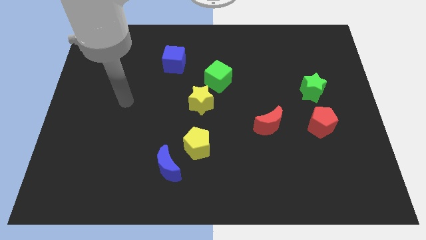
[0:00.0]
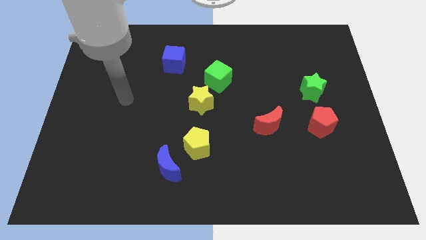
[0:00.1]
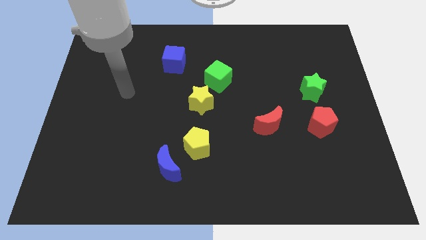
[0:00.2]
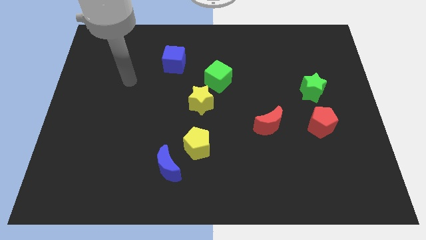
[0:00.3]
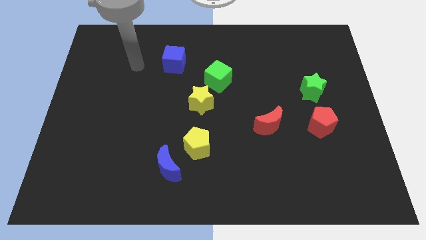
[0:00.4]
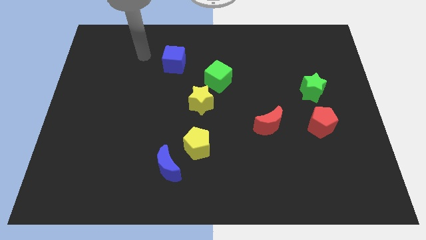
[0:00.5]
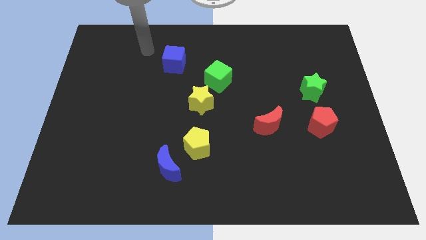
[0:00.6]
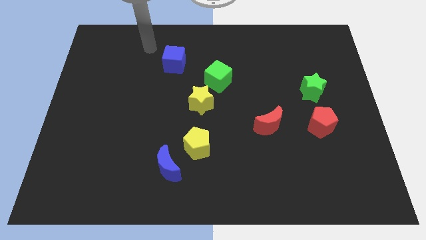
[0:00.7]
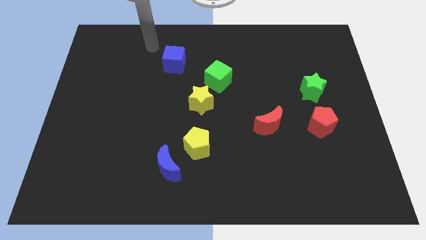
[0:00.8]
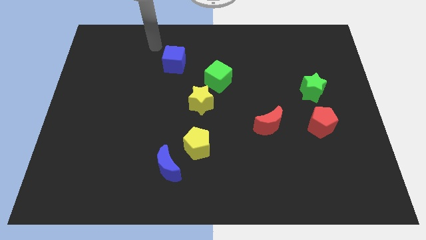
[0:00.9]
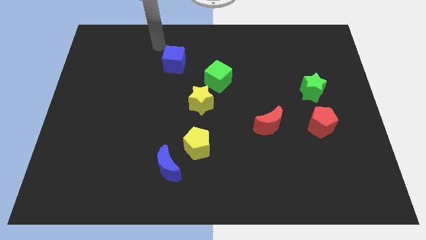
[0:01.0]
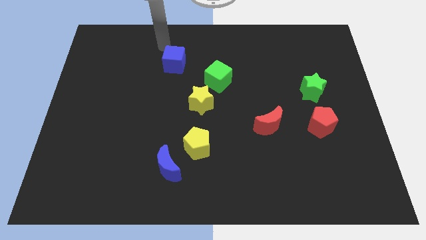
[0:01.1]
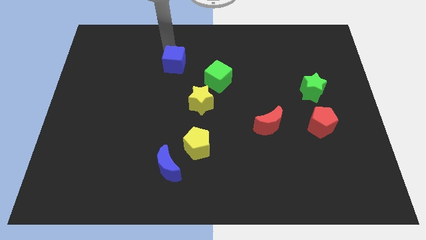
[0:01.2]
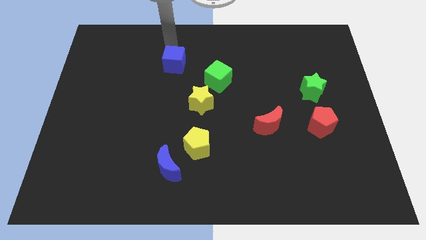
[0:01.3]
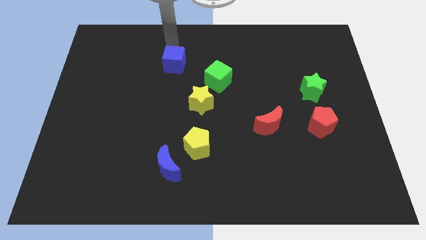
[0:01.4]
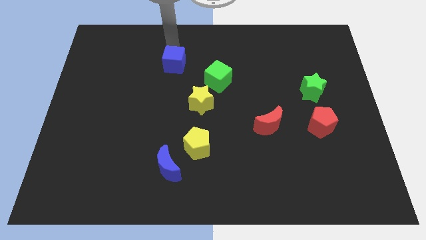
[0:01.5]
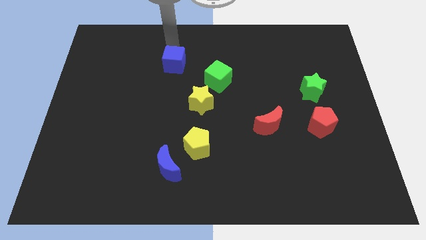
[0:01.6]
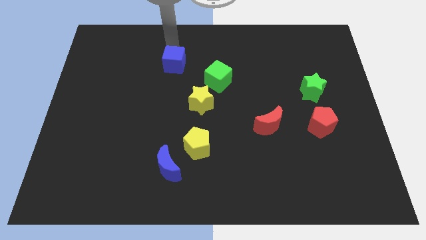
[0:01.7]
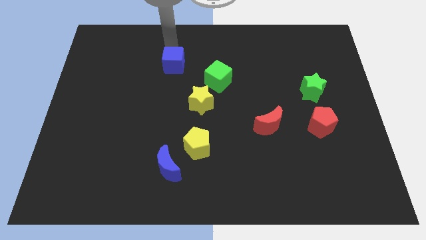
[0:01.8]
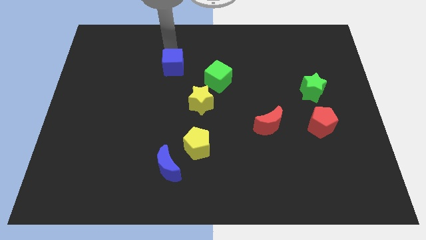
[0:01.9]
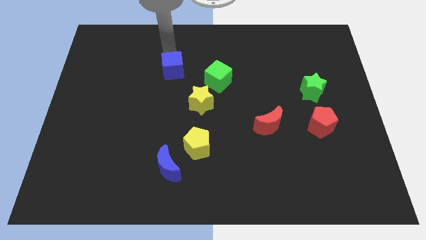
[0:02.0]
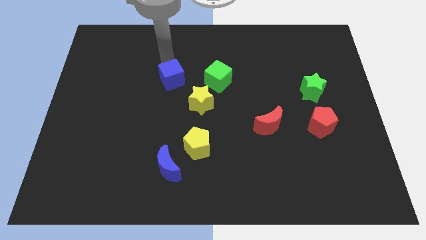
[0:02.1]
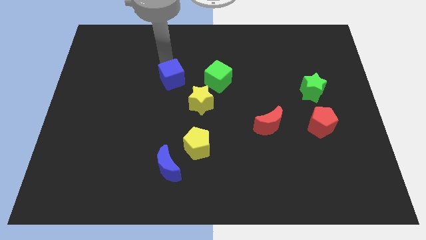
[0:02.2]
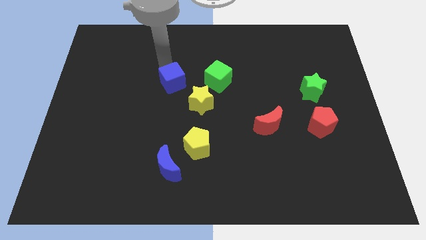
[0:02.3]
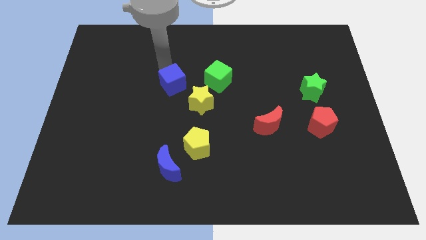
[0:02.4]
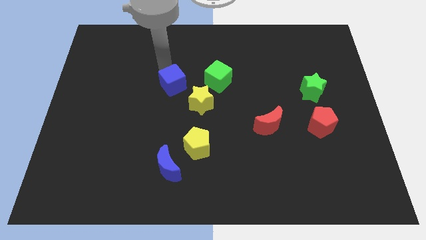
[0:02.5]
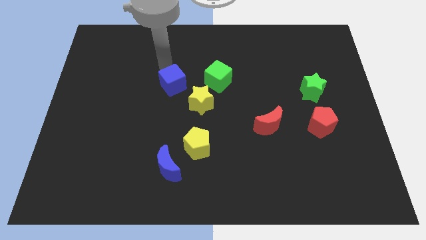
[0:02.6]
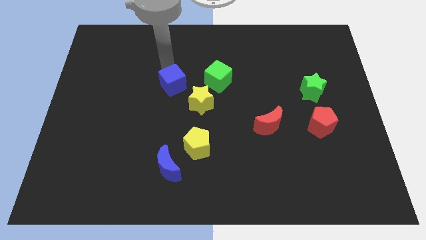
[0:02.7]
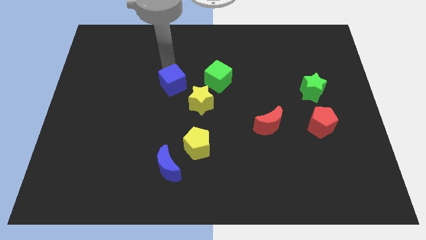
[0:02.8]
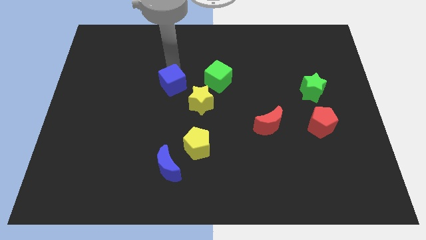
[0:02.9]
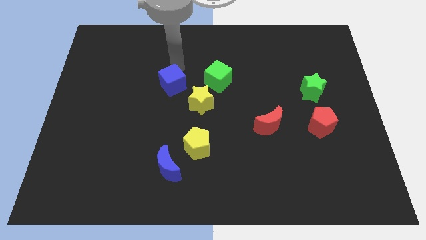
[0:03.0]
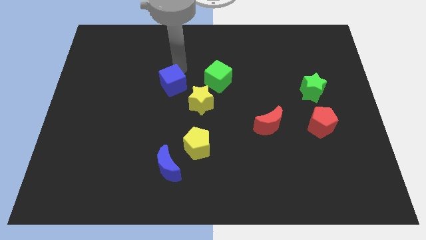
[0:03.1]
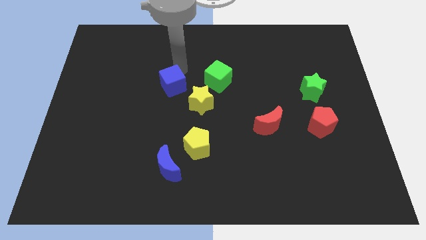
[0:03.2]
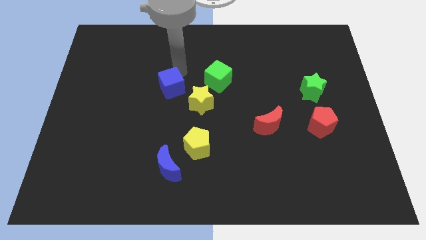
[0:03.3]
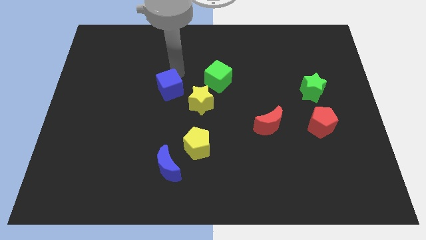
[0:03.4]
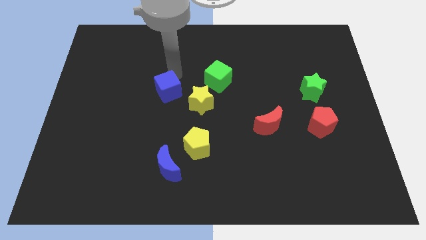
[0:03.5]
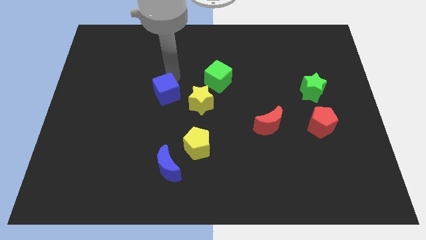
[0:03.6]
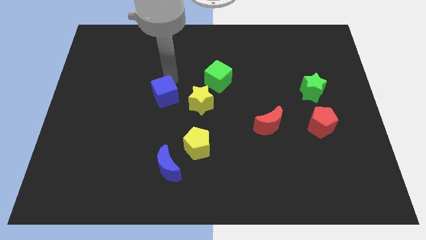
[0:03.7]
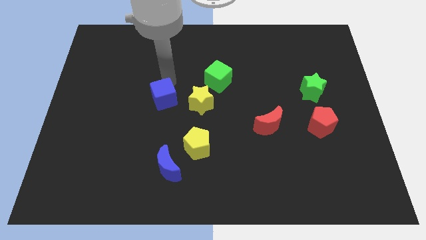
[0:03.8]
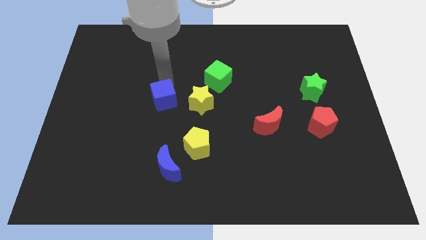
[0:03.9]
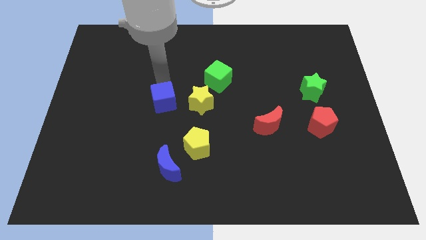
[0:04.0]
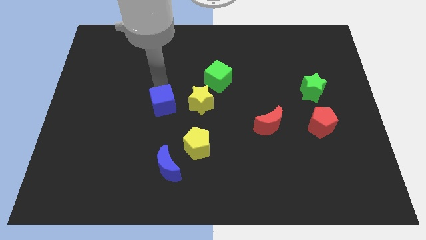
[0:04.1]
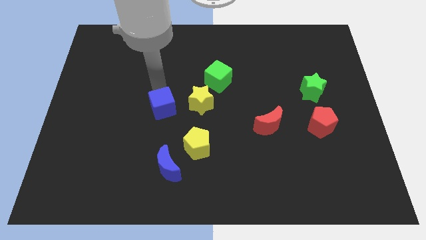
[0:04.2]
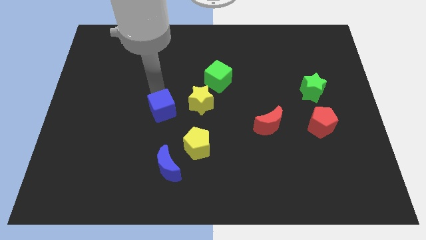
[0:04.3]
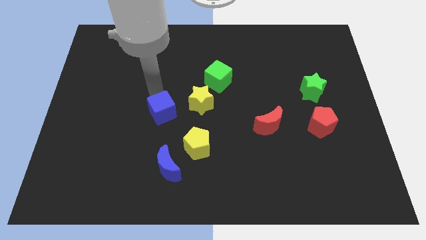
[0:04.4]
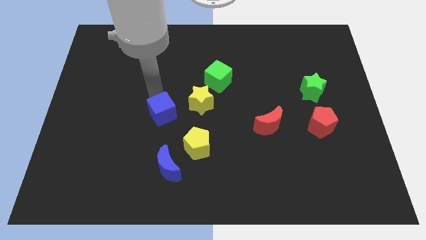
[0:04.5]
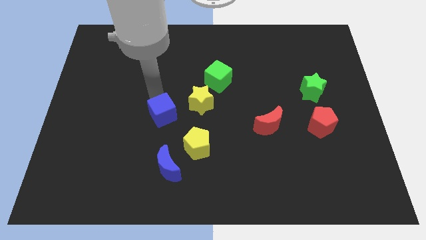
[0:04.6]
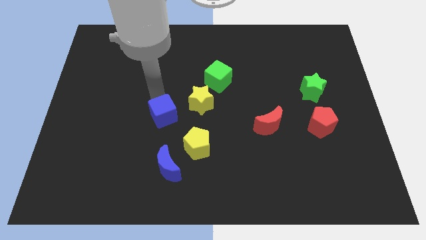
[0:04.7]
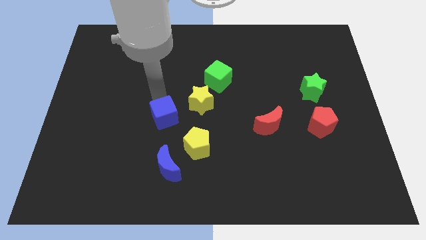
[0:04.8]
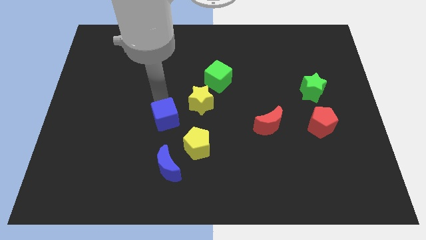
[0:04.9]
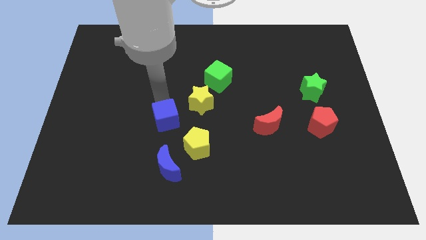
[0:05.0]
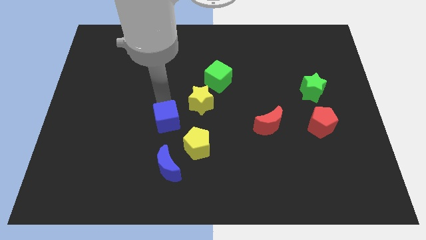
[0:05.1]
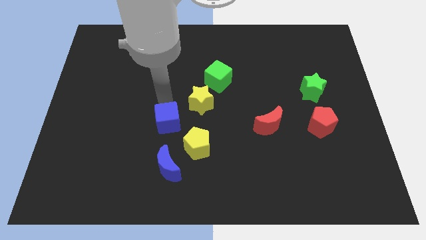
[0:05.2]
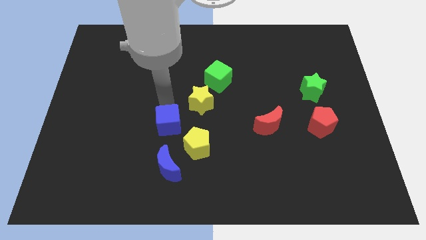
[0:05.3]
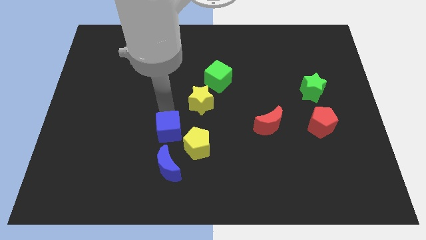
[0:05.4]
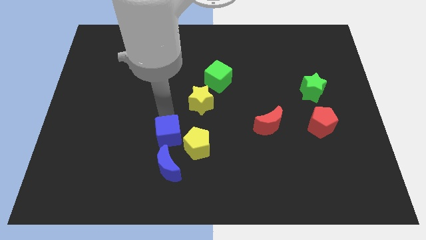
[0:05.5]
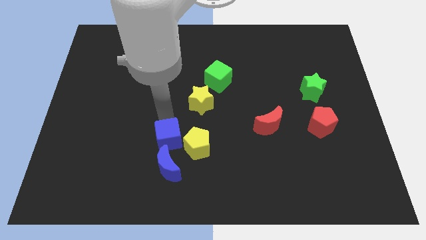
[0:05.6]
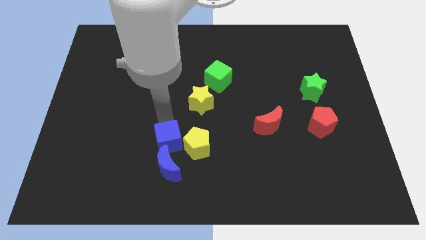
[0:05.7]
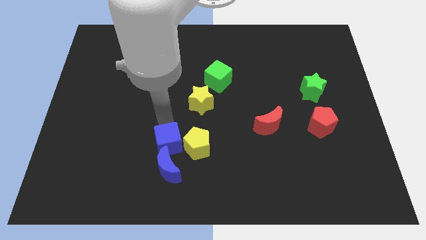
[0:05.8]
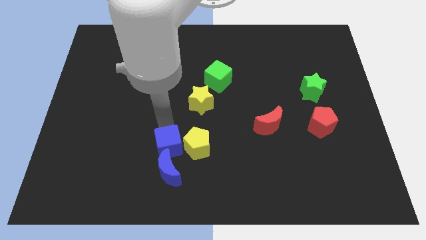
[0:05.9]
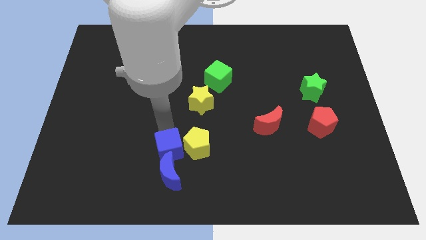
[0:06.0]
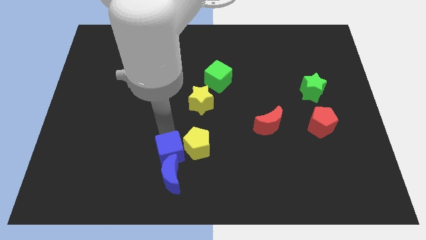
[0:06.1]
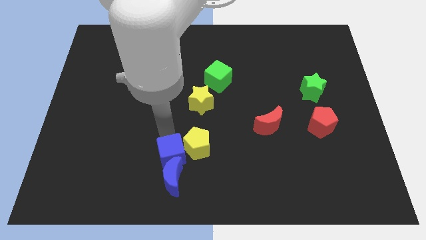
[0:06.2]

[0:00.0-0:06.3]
push the blue cube towards the blue moon

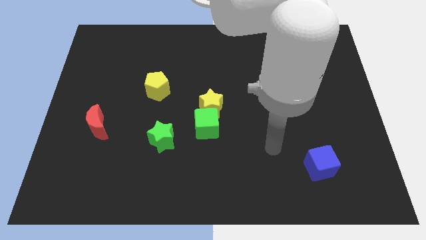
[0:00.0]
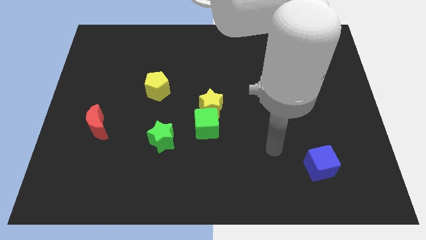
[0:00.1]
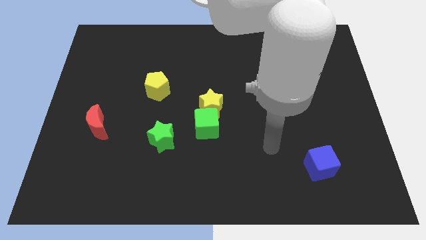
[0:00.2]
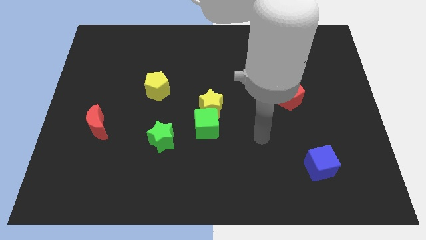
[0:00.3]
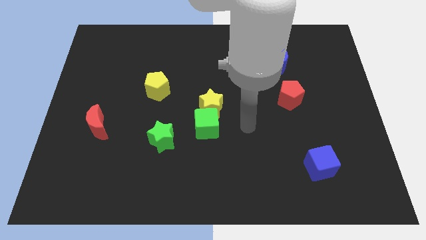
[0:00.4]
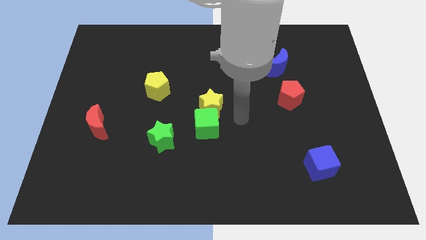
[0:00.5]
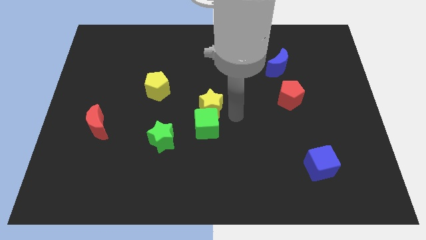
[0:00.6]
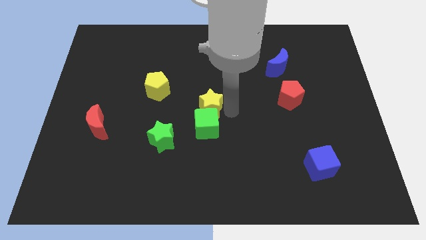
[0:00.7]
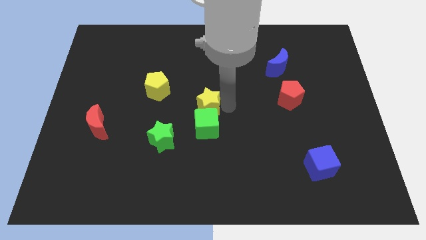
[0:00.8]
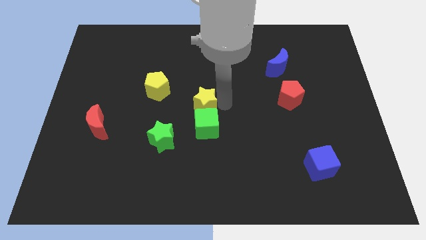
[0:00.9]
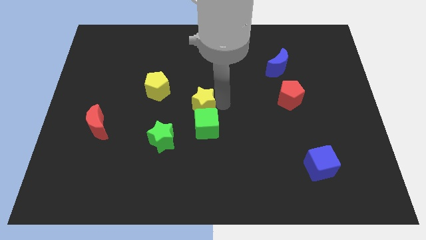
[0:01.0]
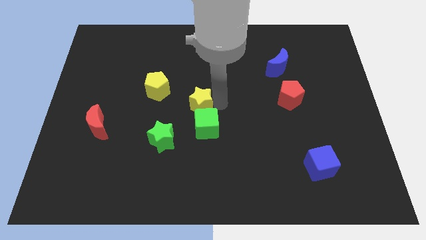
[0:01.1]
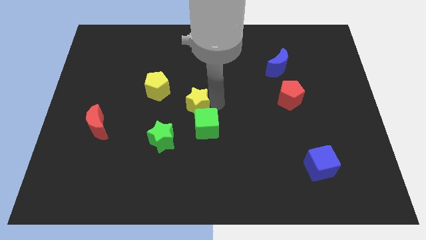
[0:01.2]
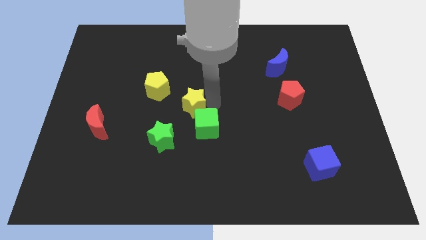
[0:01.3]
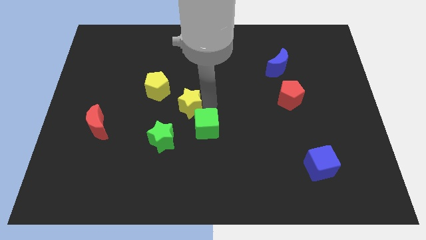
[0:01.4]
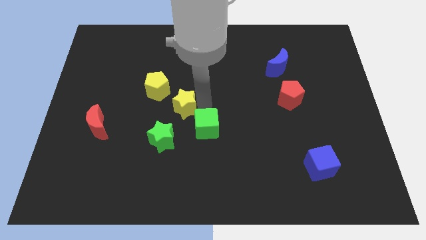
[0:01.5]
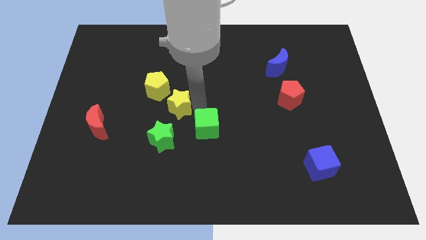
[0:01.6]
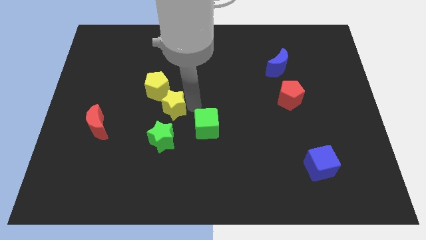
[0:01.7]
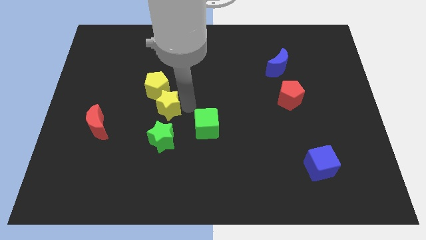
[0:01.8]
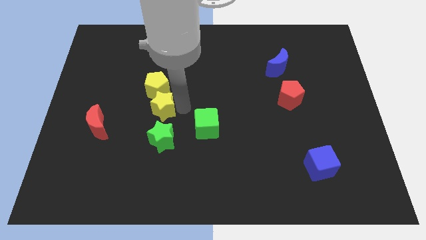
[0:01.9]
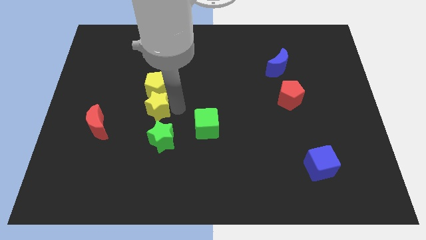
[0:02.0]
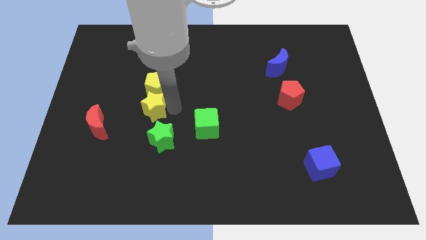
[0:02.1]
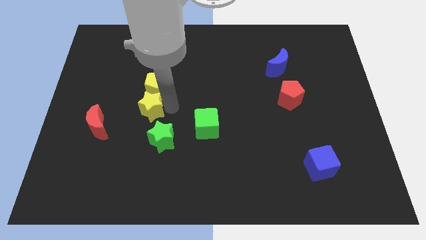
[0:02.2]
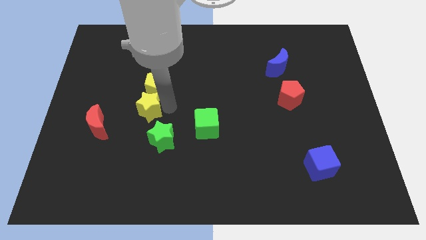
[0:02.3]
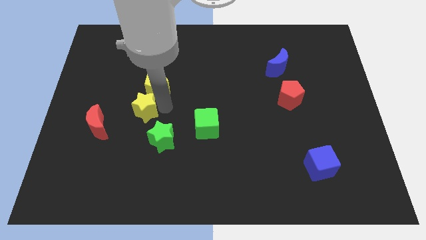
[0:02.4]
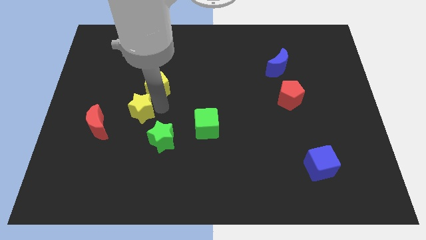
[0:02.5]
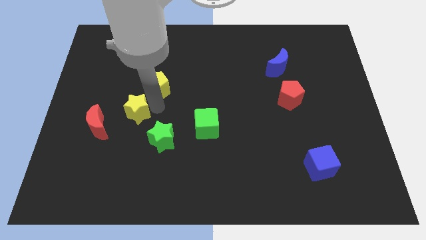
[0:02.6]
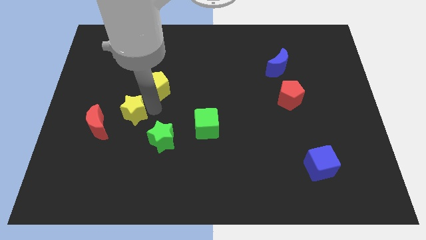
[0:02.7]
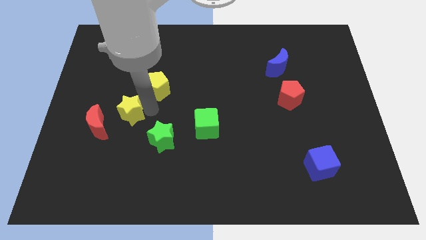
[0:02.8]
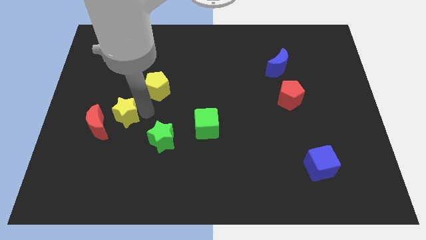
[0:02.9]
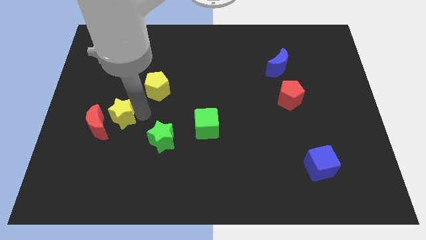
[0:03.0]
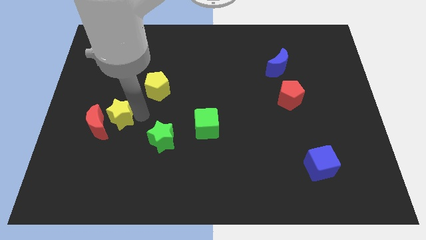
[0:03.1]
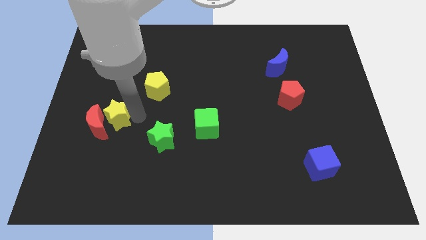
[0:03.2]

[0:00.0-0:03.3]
move the yellow star to the red moon
